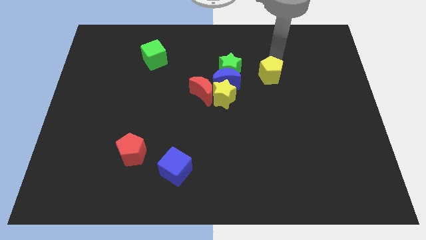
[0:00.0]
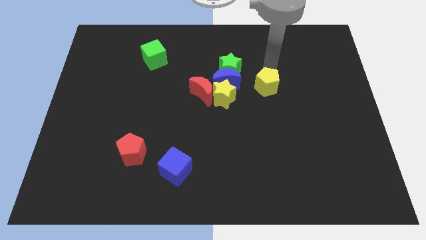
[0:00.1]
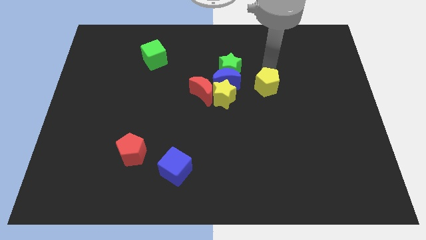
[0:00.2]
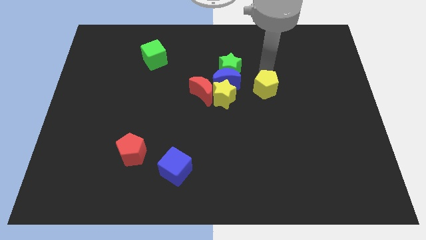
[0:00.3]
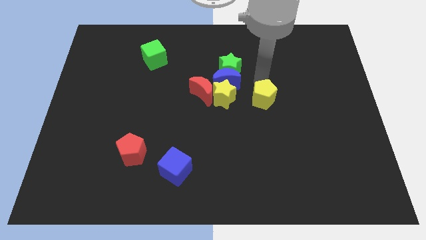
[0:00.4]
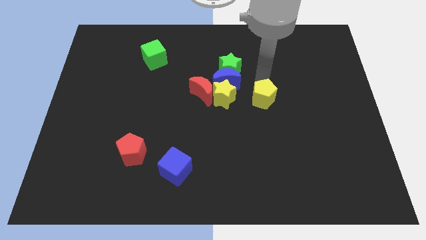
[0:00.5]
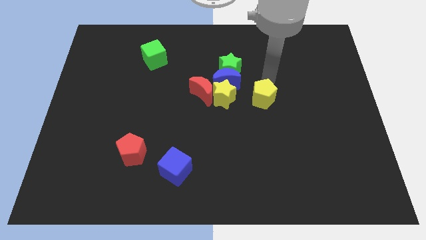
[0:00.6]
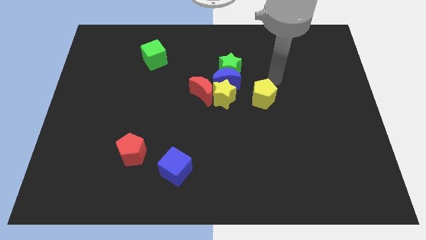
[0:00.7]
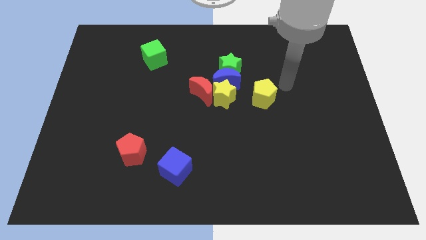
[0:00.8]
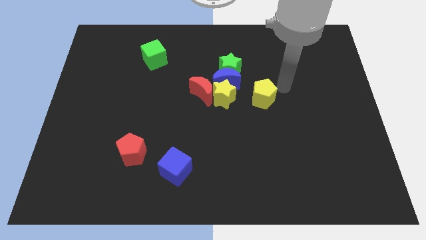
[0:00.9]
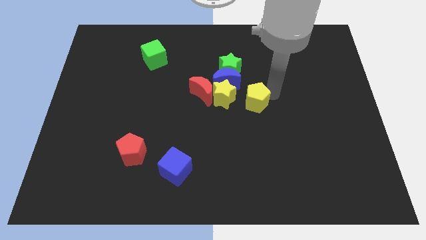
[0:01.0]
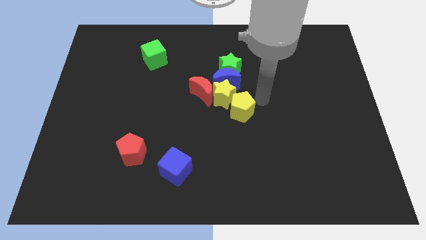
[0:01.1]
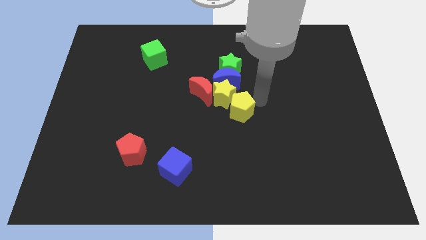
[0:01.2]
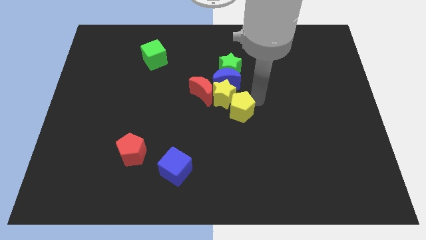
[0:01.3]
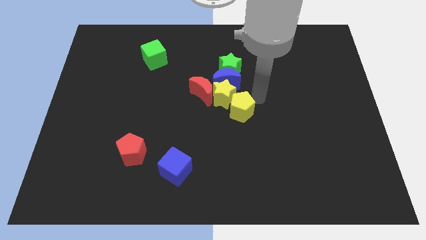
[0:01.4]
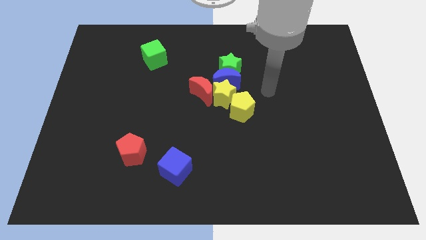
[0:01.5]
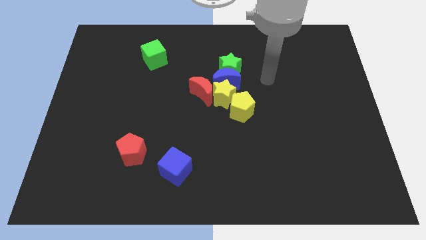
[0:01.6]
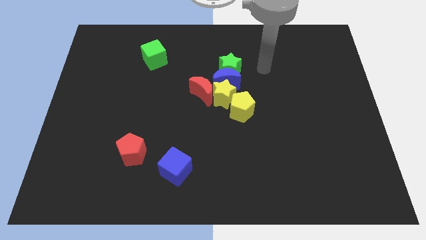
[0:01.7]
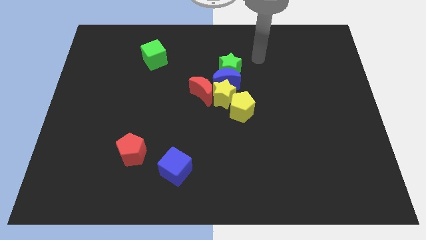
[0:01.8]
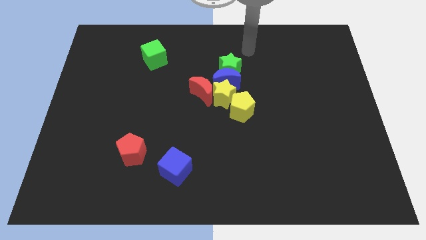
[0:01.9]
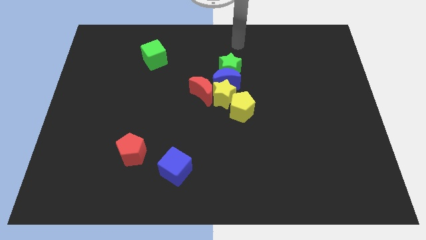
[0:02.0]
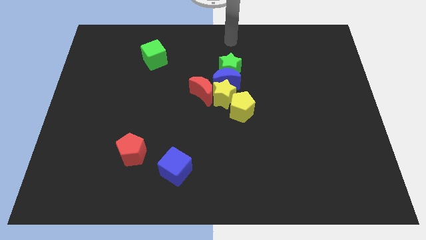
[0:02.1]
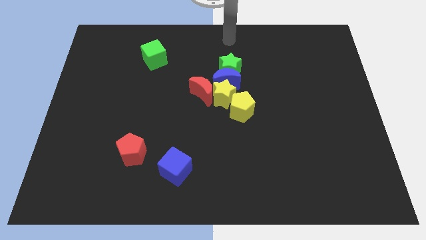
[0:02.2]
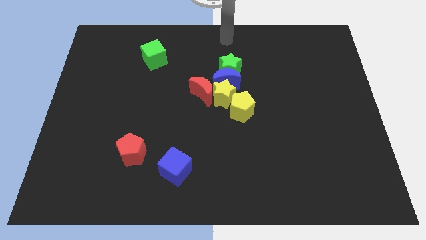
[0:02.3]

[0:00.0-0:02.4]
place yellow pentagon to the bottom right of the yellow star

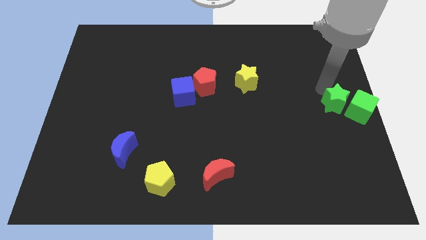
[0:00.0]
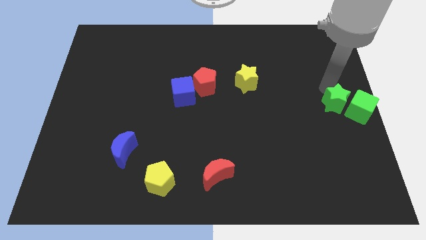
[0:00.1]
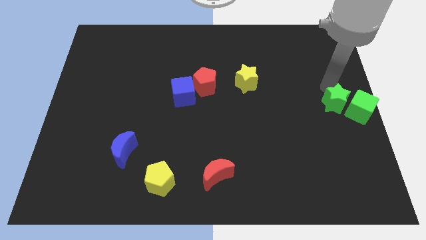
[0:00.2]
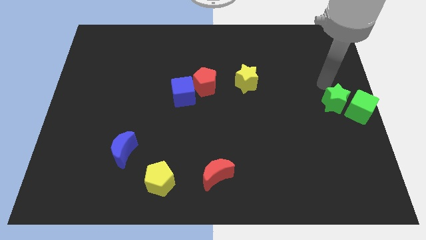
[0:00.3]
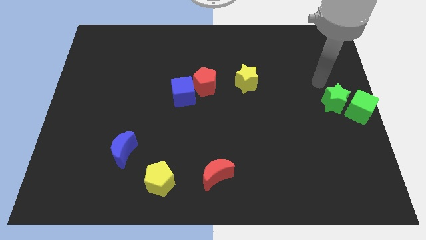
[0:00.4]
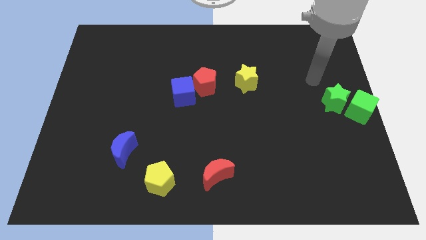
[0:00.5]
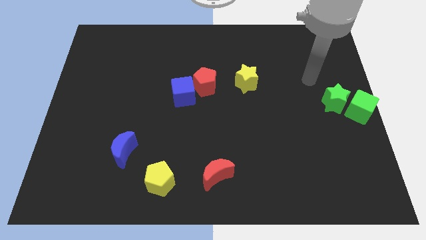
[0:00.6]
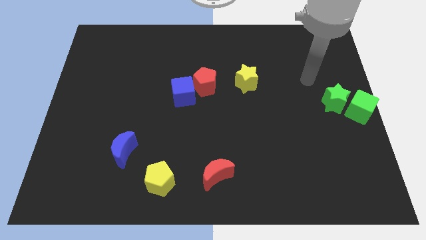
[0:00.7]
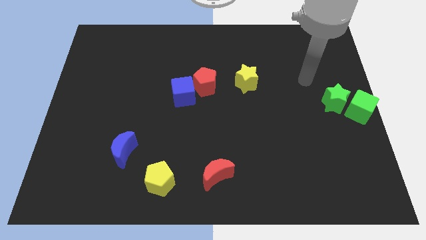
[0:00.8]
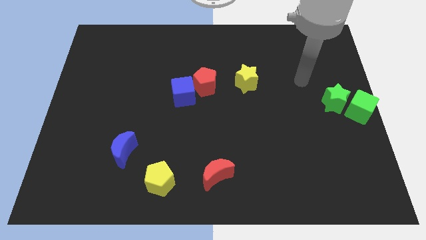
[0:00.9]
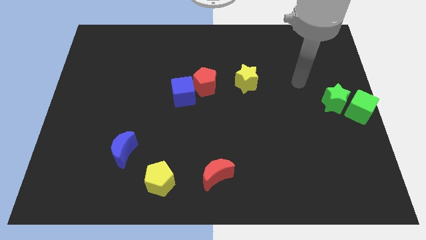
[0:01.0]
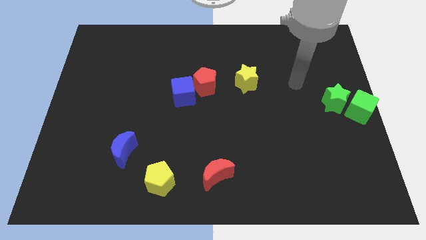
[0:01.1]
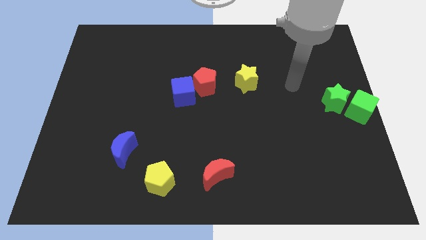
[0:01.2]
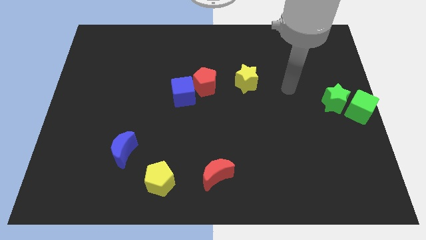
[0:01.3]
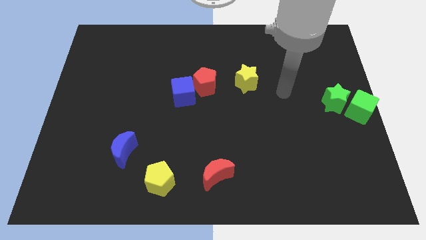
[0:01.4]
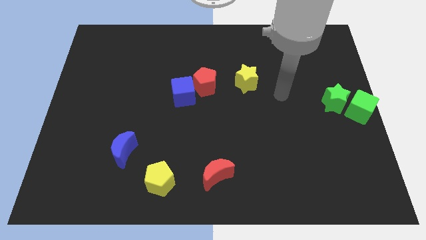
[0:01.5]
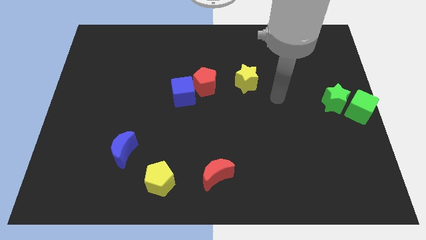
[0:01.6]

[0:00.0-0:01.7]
move your arm away from the green star

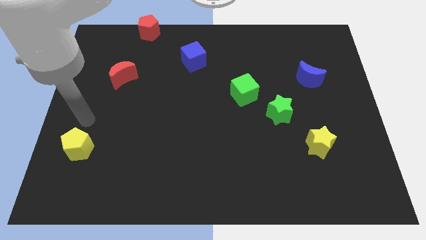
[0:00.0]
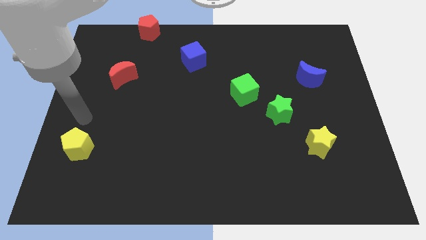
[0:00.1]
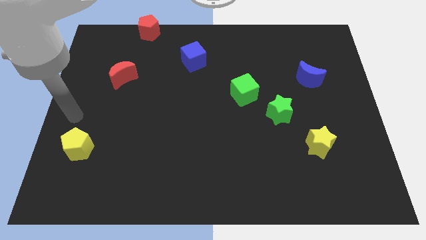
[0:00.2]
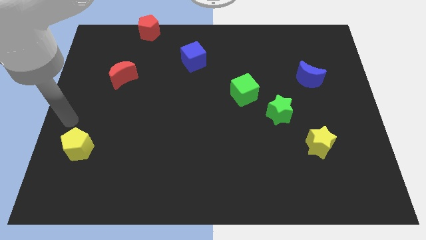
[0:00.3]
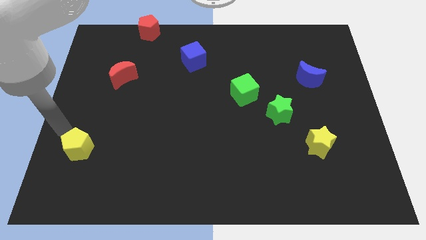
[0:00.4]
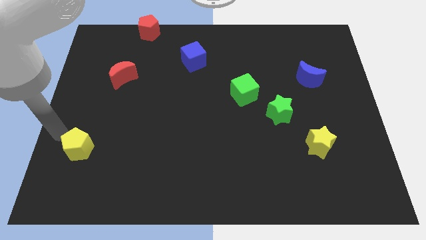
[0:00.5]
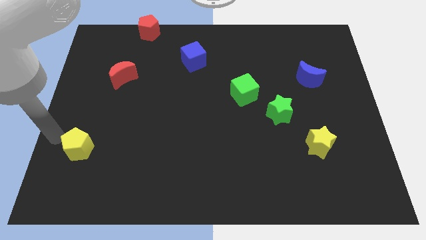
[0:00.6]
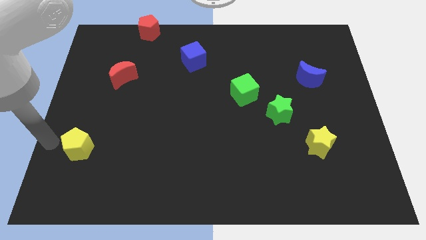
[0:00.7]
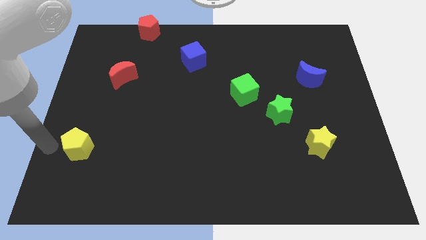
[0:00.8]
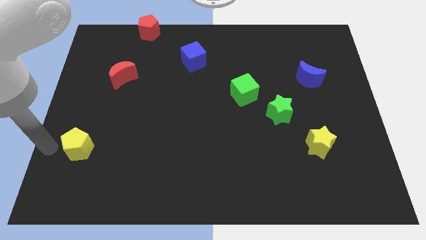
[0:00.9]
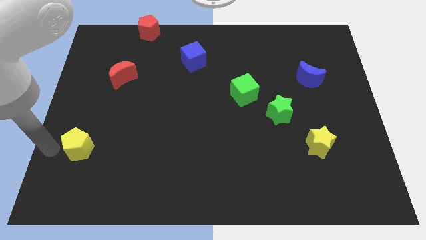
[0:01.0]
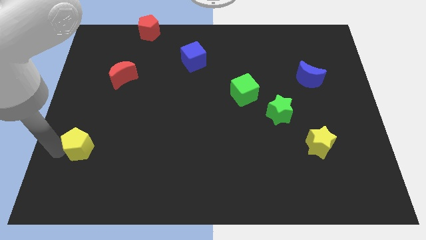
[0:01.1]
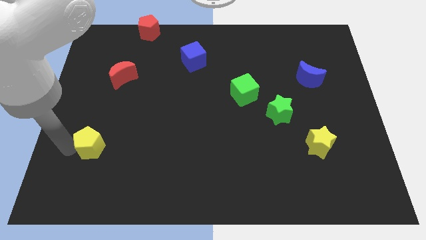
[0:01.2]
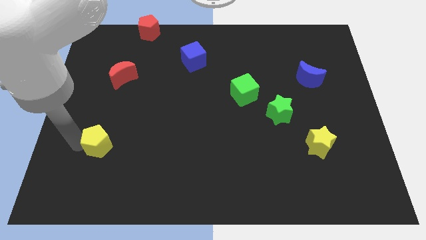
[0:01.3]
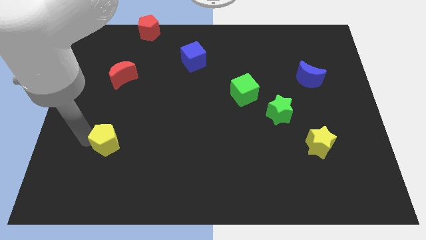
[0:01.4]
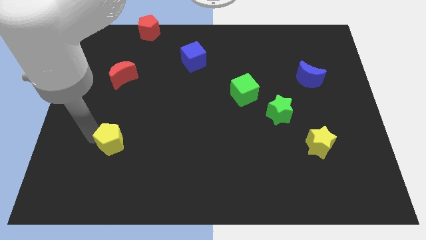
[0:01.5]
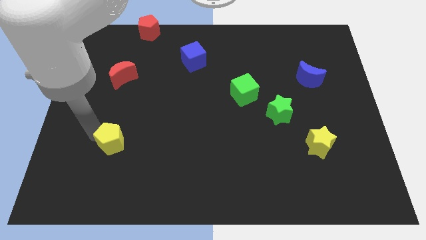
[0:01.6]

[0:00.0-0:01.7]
move yellow pentagon slightly right

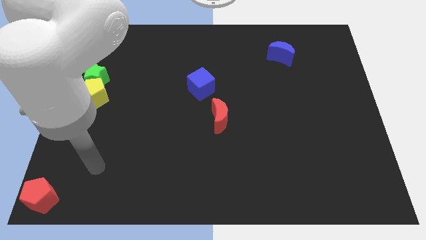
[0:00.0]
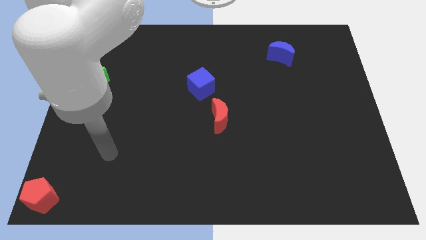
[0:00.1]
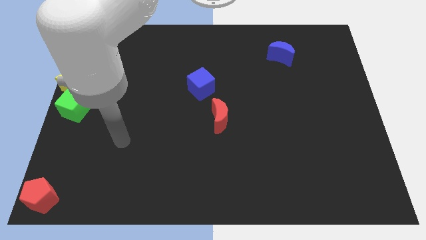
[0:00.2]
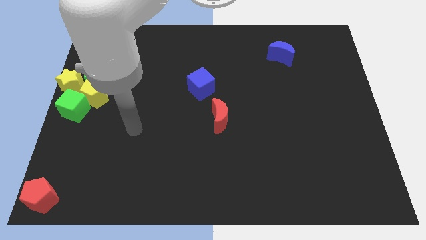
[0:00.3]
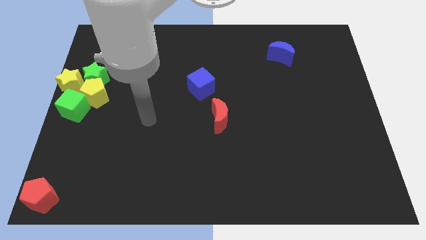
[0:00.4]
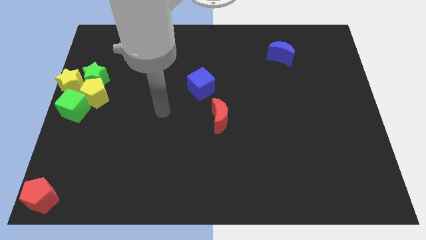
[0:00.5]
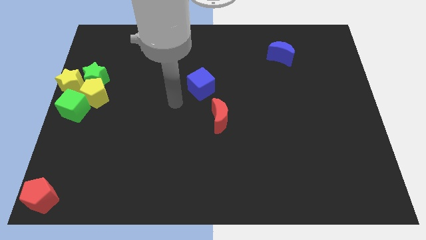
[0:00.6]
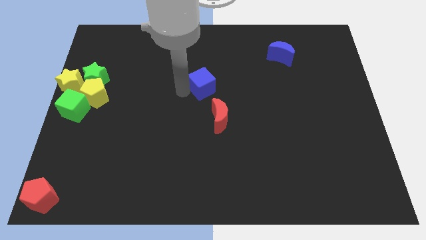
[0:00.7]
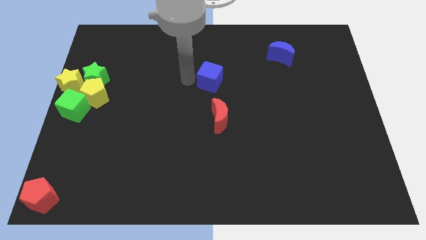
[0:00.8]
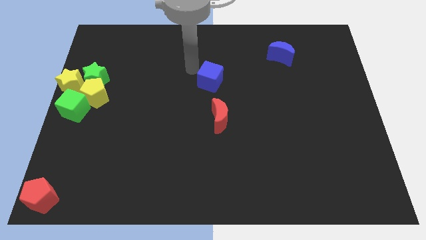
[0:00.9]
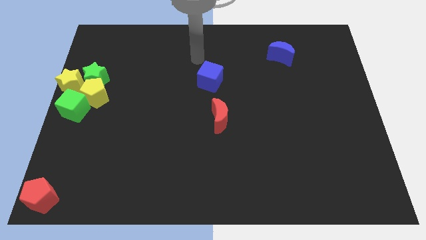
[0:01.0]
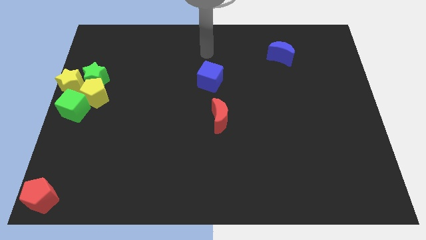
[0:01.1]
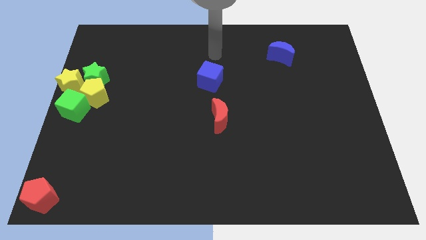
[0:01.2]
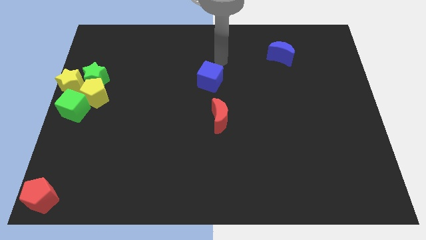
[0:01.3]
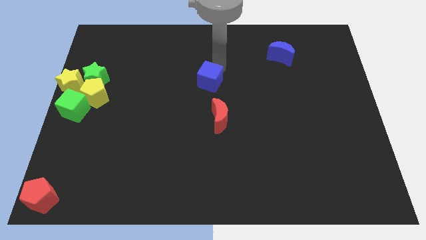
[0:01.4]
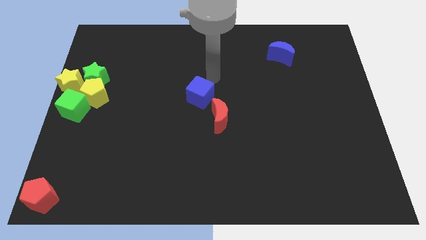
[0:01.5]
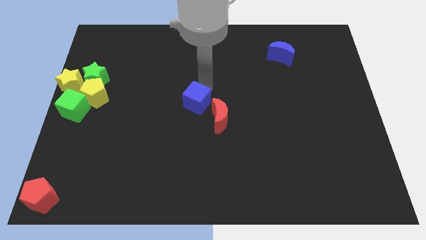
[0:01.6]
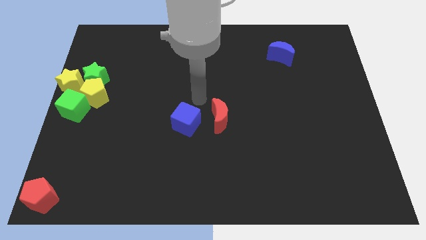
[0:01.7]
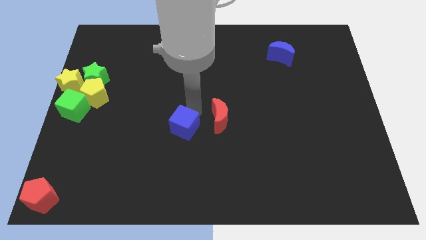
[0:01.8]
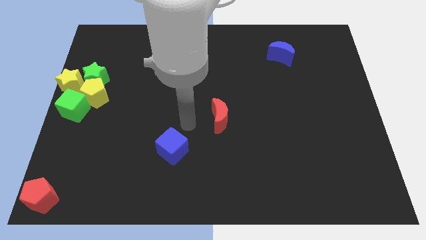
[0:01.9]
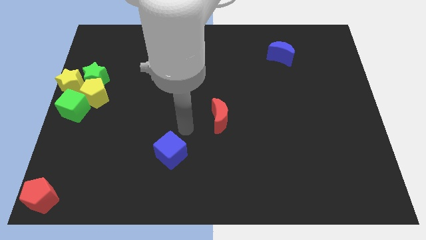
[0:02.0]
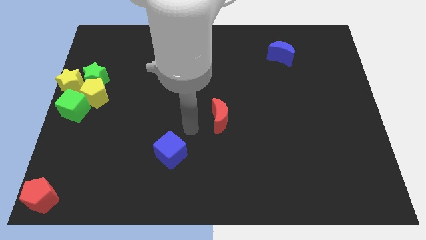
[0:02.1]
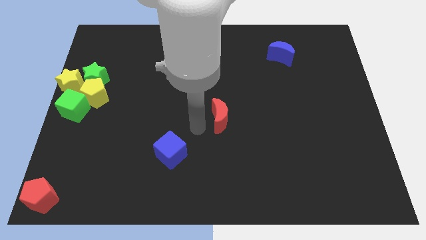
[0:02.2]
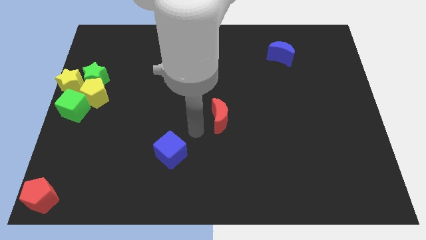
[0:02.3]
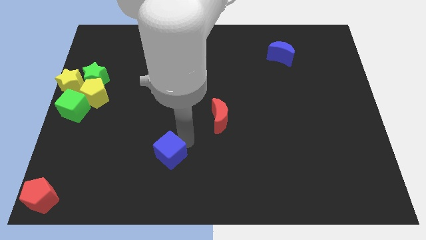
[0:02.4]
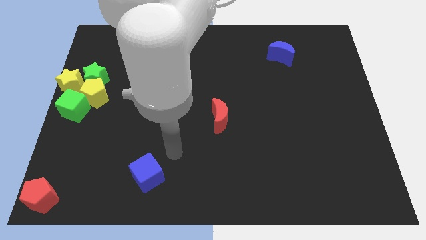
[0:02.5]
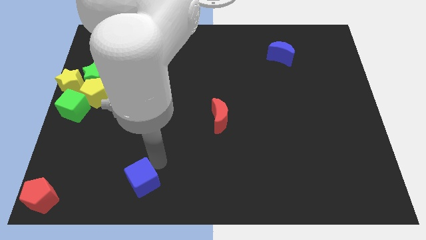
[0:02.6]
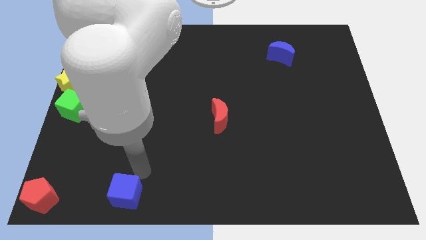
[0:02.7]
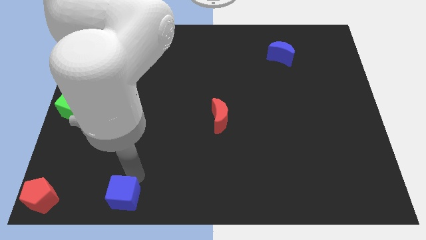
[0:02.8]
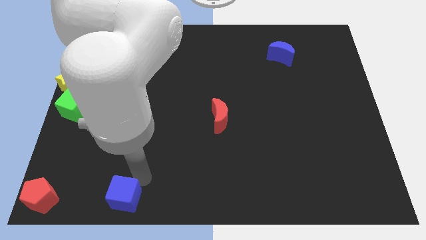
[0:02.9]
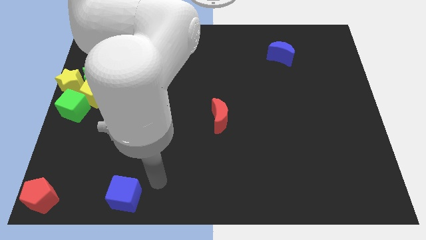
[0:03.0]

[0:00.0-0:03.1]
drag blue cube towards bottom of the board
